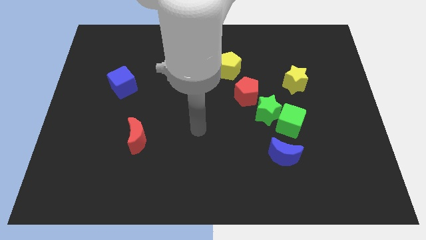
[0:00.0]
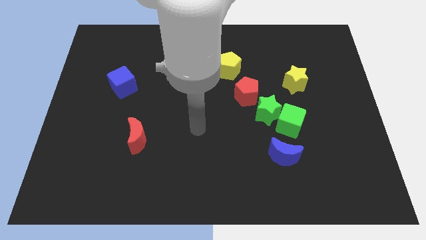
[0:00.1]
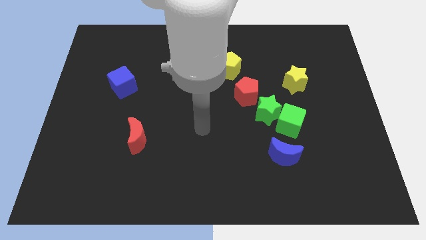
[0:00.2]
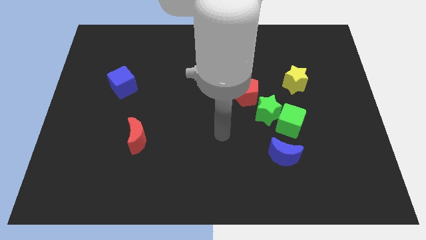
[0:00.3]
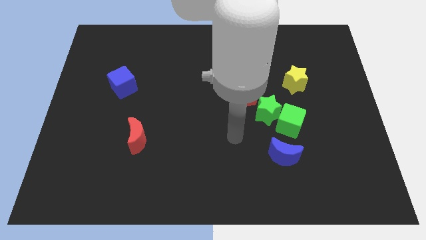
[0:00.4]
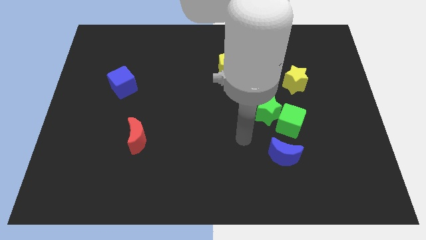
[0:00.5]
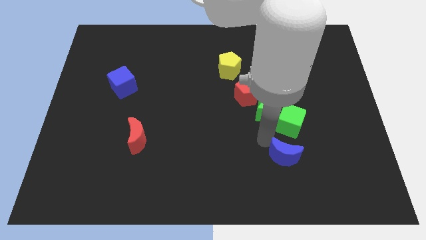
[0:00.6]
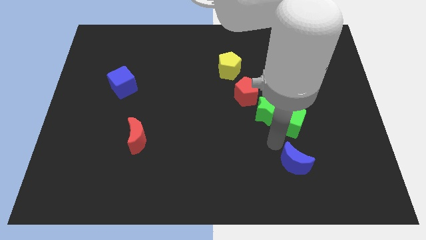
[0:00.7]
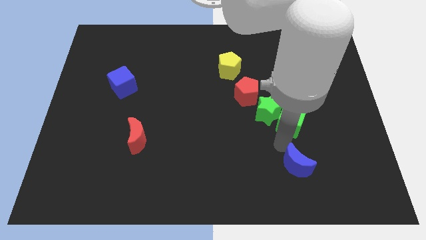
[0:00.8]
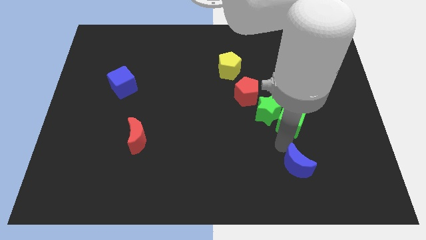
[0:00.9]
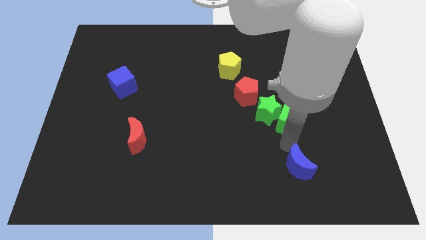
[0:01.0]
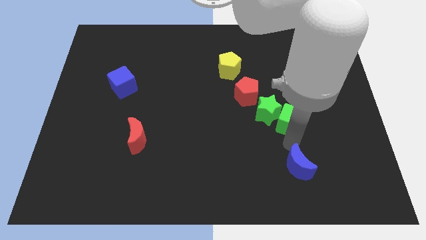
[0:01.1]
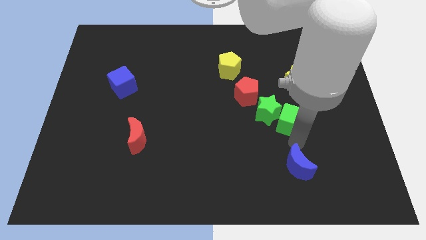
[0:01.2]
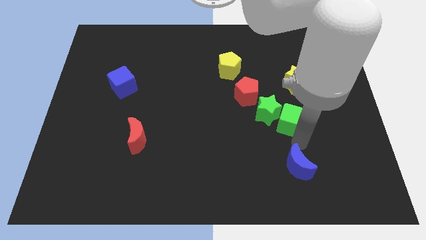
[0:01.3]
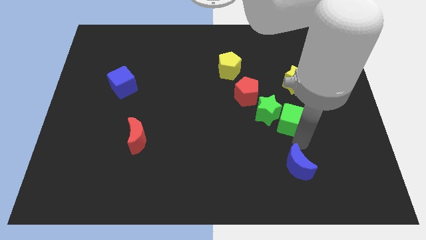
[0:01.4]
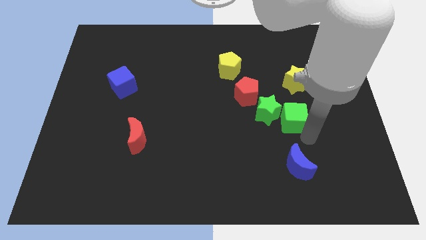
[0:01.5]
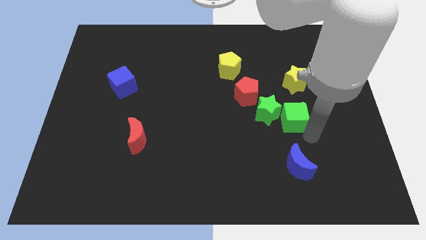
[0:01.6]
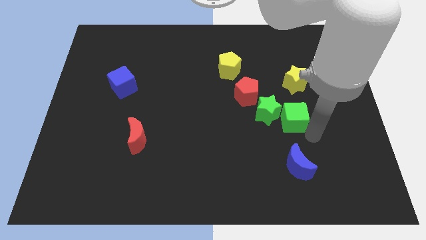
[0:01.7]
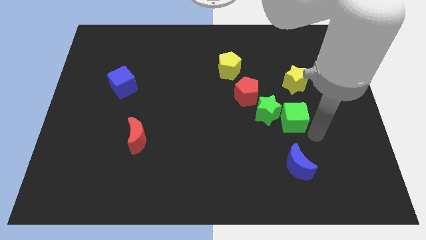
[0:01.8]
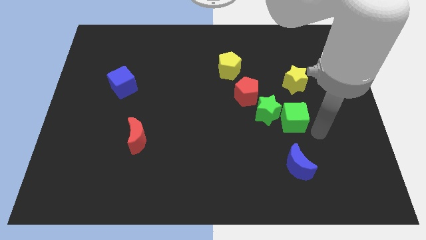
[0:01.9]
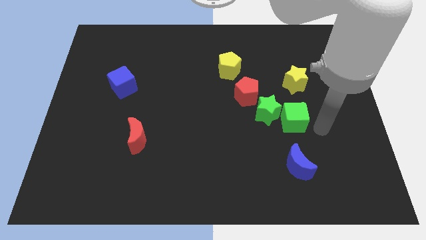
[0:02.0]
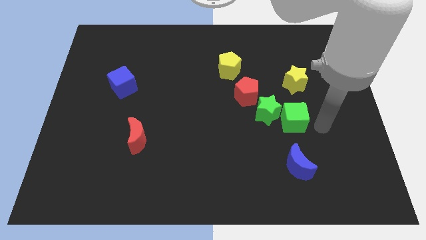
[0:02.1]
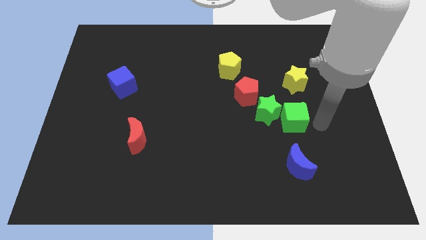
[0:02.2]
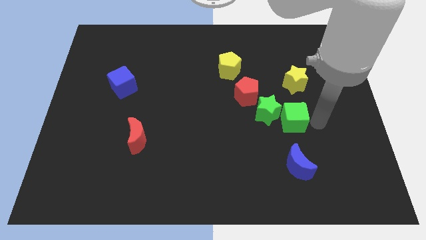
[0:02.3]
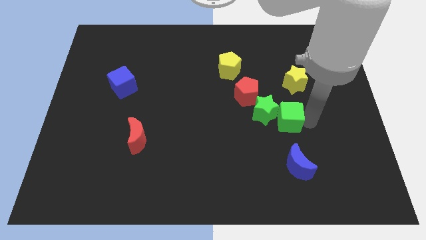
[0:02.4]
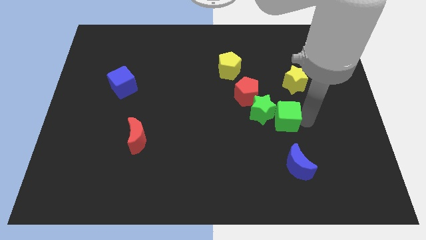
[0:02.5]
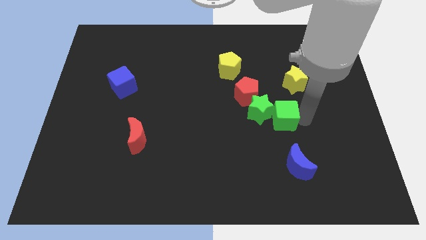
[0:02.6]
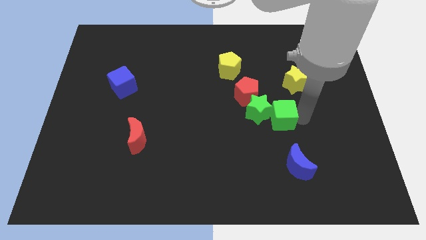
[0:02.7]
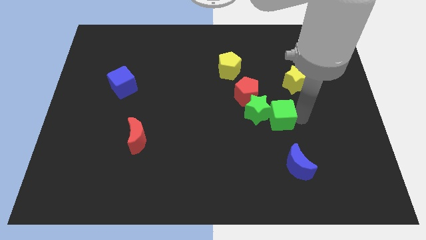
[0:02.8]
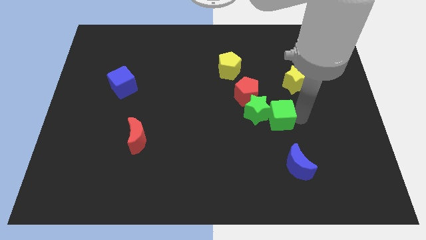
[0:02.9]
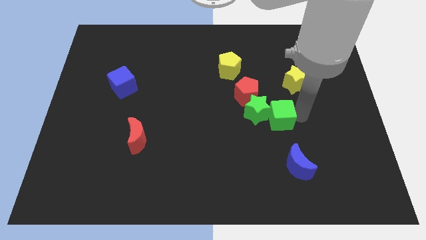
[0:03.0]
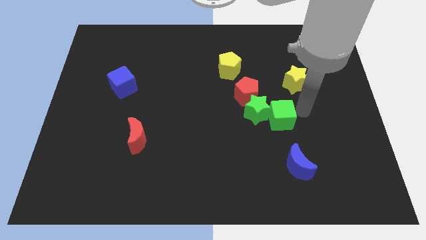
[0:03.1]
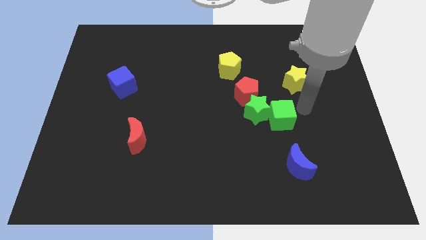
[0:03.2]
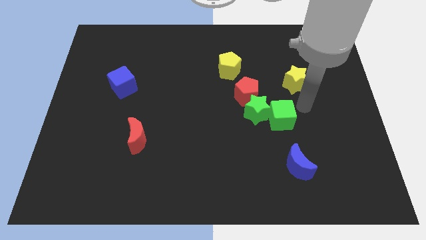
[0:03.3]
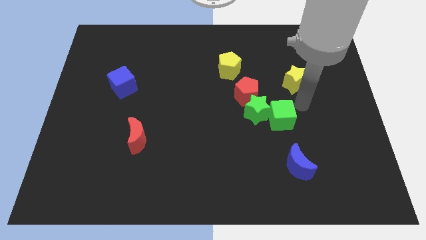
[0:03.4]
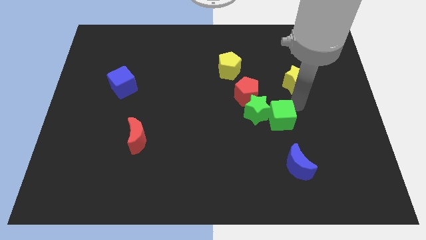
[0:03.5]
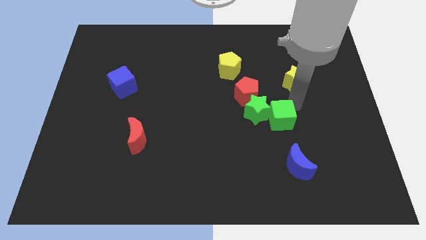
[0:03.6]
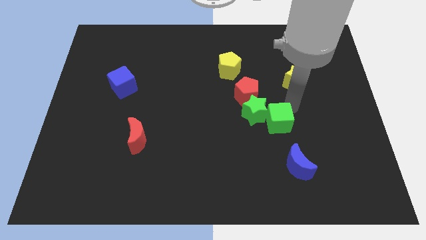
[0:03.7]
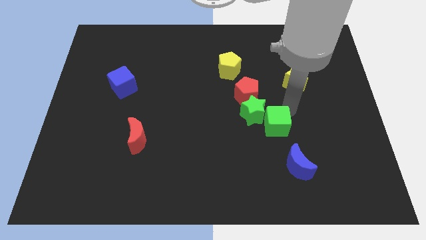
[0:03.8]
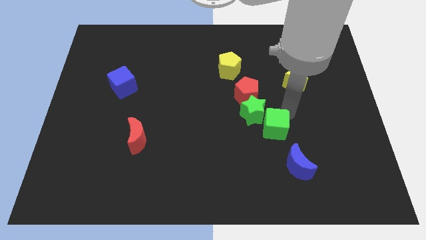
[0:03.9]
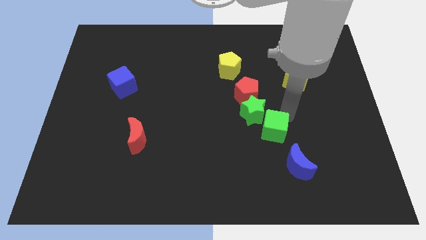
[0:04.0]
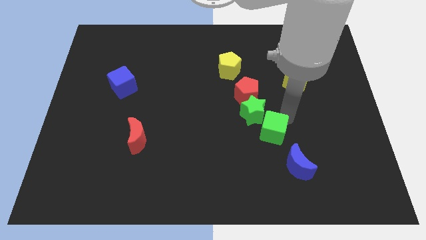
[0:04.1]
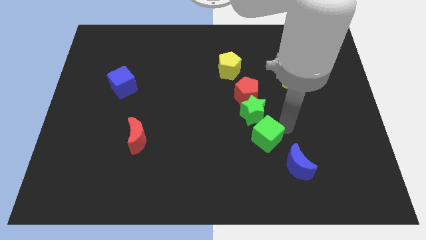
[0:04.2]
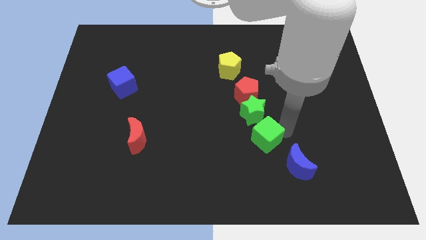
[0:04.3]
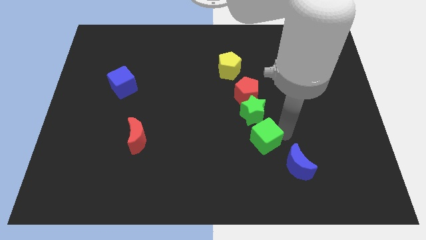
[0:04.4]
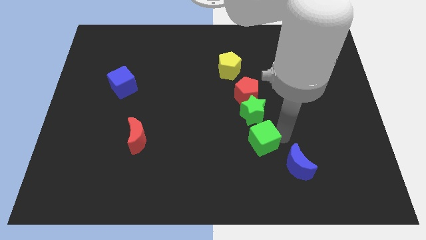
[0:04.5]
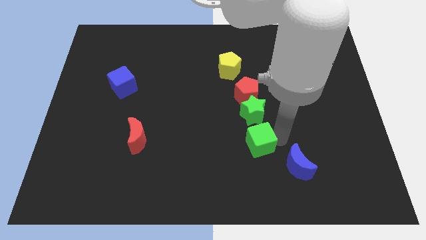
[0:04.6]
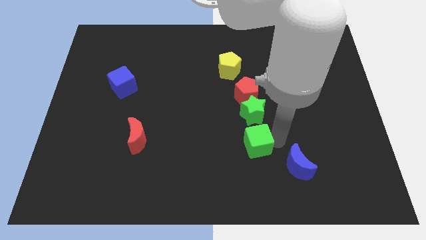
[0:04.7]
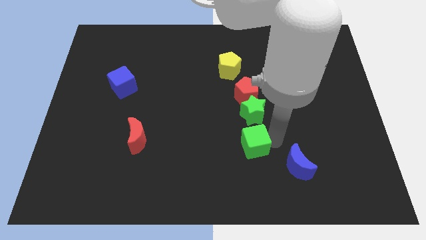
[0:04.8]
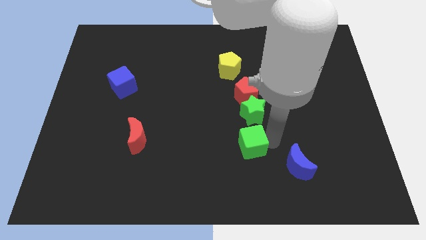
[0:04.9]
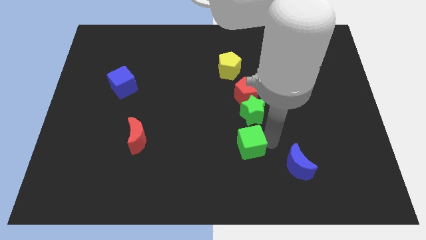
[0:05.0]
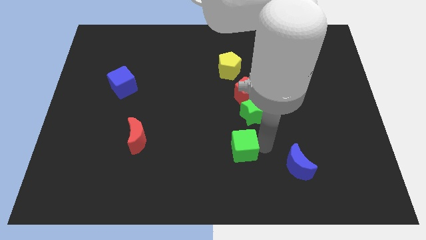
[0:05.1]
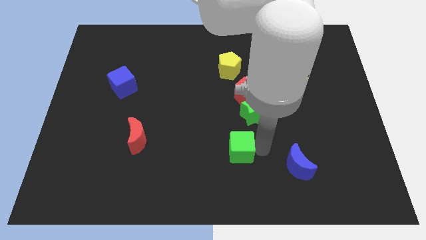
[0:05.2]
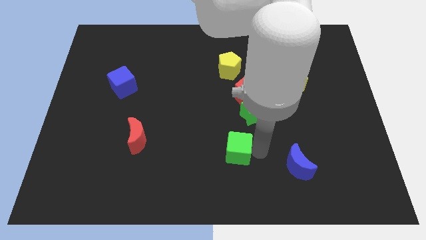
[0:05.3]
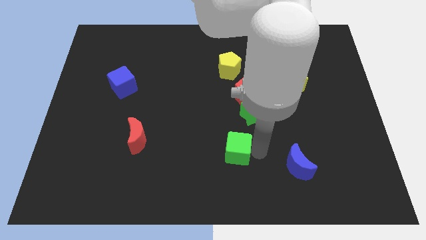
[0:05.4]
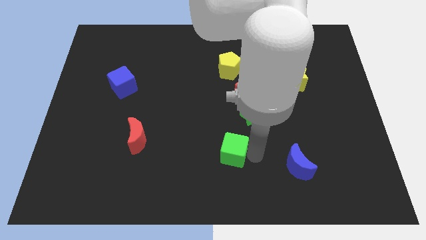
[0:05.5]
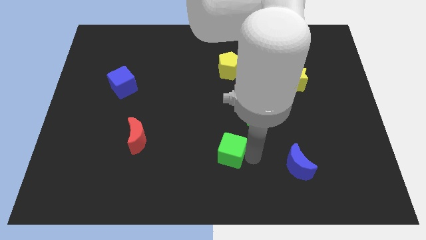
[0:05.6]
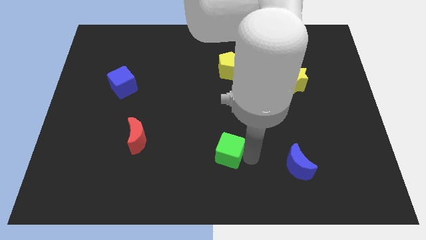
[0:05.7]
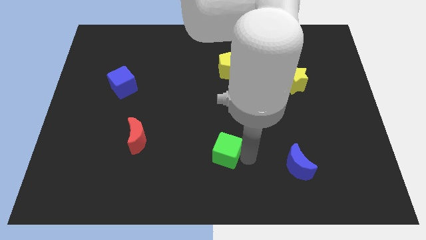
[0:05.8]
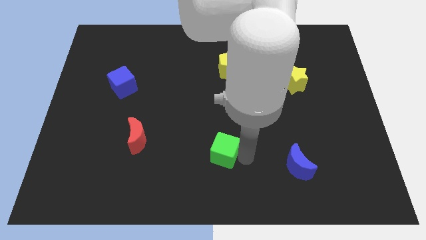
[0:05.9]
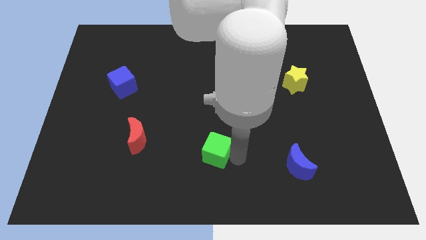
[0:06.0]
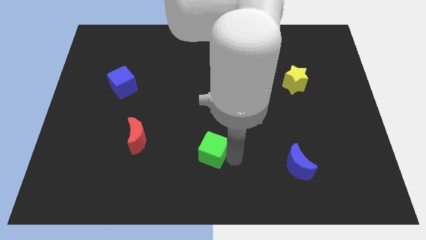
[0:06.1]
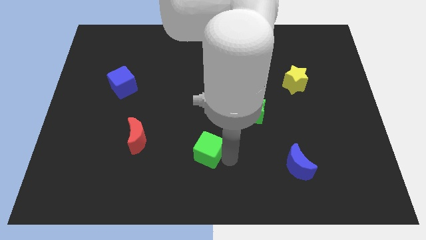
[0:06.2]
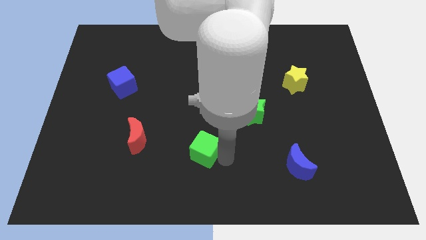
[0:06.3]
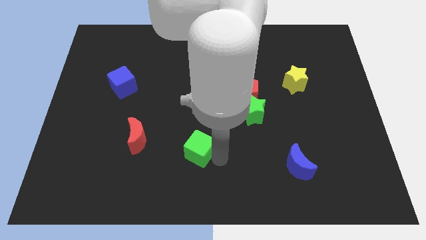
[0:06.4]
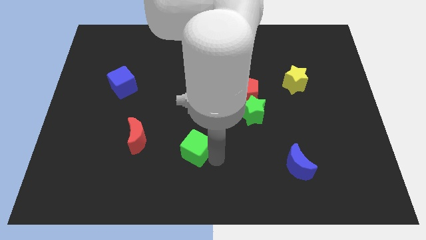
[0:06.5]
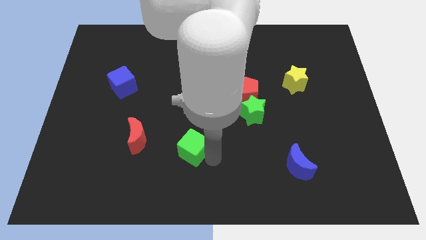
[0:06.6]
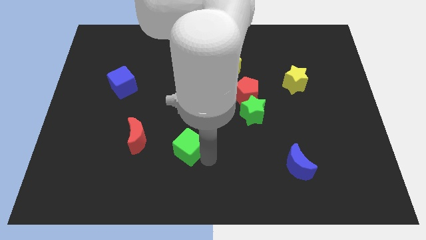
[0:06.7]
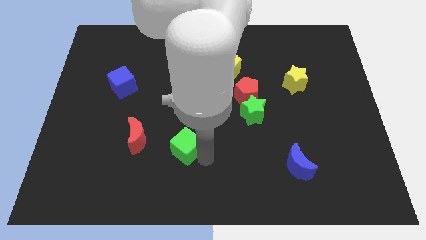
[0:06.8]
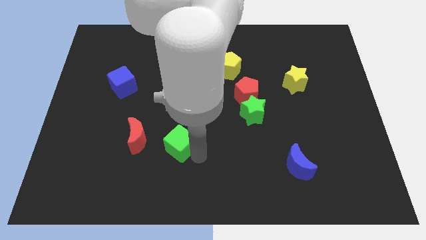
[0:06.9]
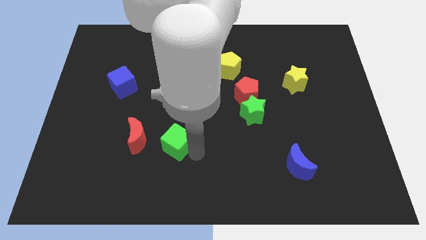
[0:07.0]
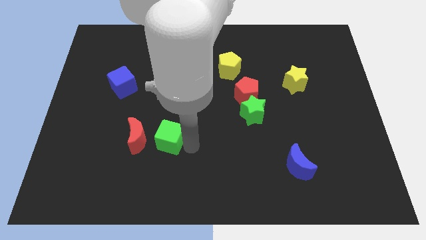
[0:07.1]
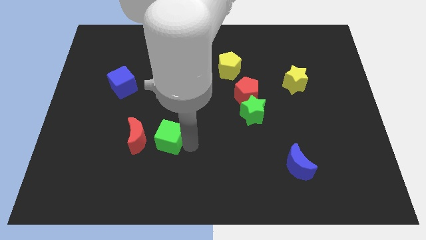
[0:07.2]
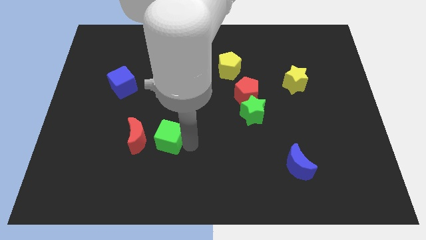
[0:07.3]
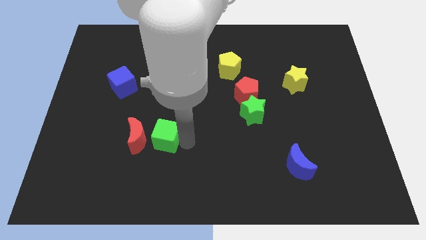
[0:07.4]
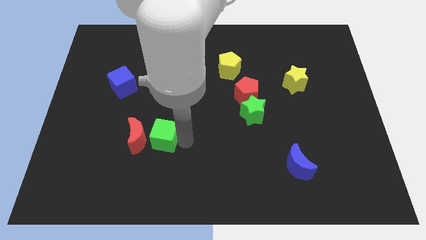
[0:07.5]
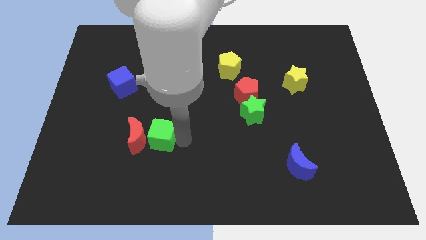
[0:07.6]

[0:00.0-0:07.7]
push the green cube close to the red moon

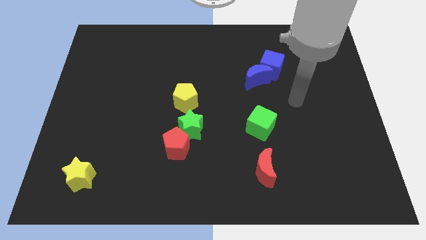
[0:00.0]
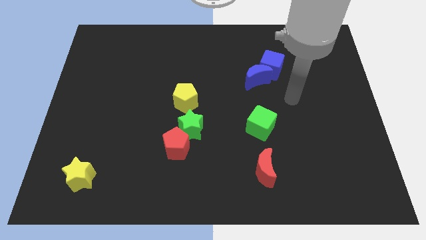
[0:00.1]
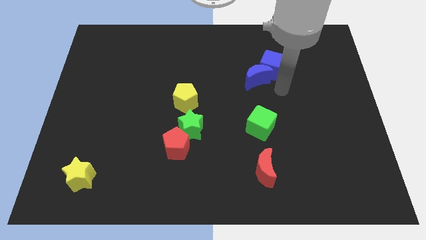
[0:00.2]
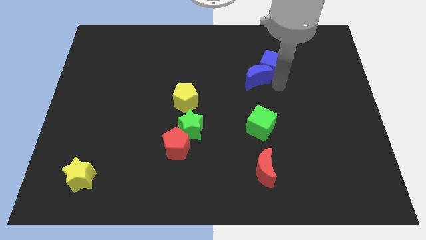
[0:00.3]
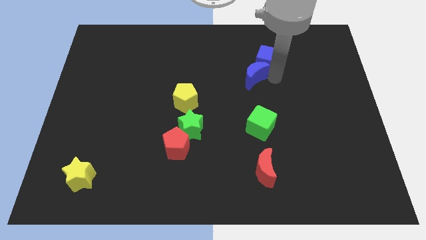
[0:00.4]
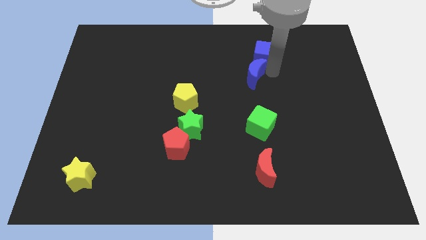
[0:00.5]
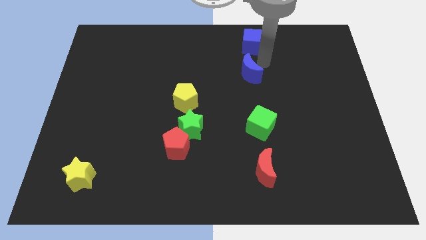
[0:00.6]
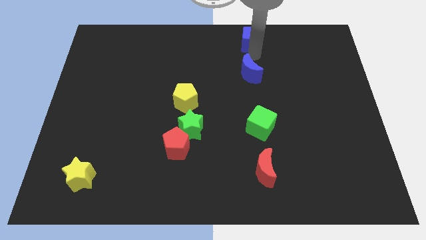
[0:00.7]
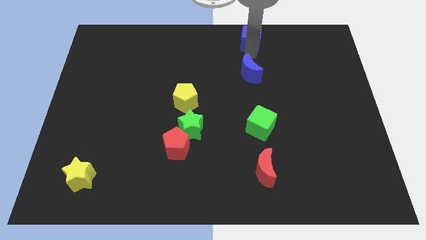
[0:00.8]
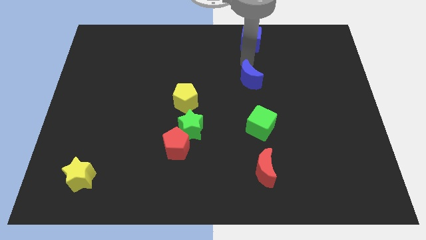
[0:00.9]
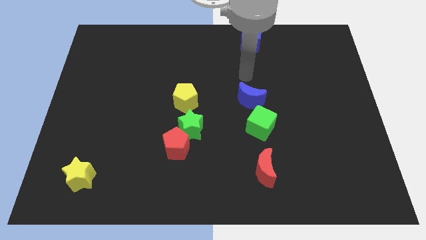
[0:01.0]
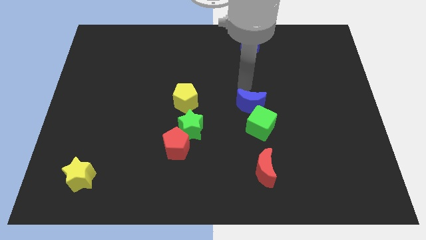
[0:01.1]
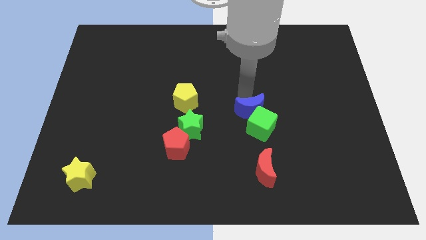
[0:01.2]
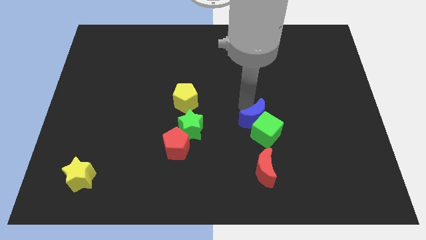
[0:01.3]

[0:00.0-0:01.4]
slide the blue moon close to the green cube
